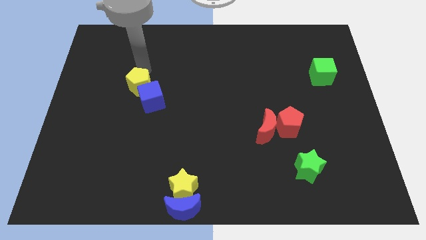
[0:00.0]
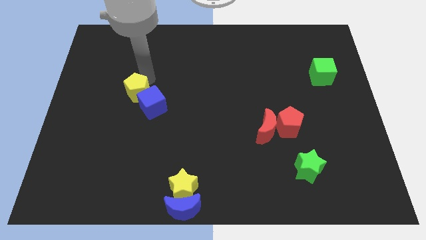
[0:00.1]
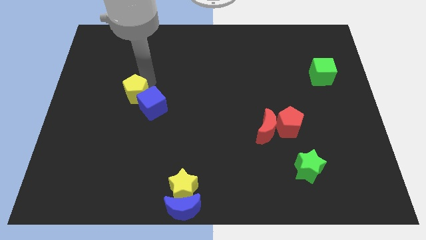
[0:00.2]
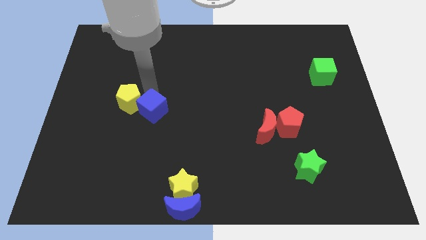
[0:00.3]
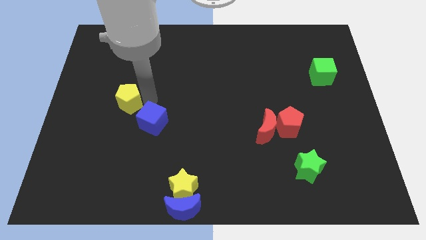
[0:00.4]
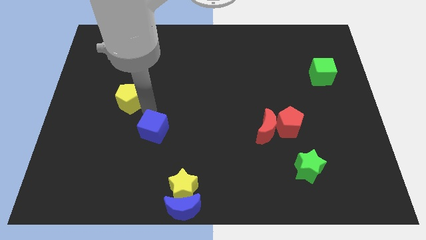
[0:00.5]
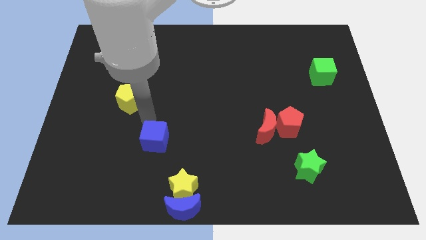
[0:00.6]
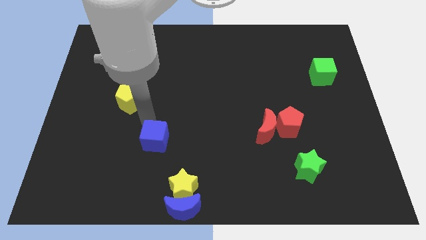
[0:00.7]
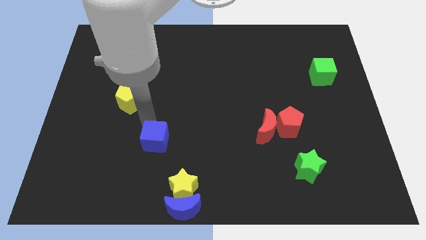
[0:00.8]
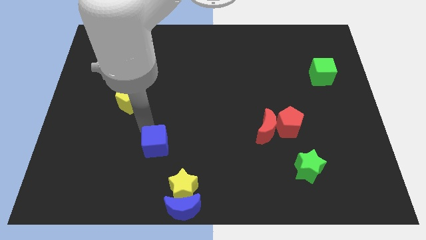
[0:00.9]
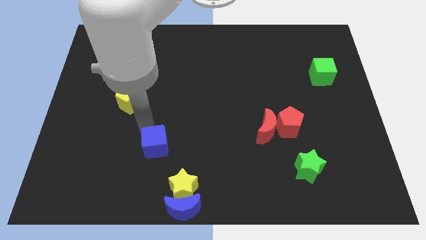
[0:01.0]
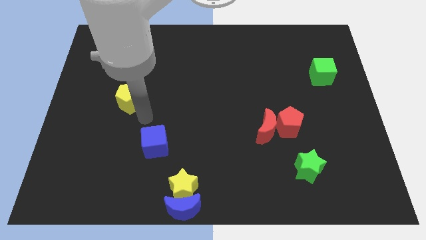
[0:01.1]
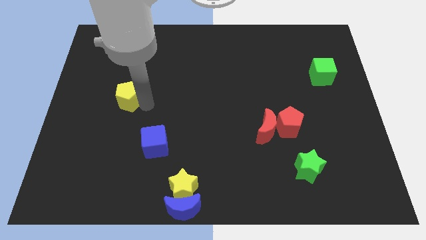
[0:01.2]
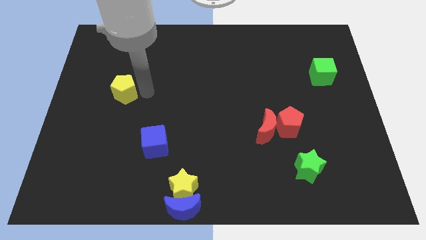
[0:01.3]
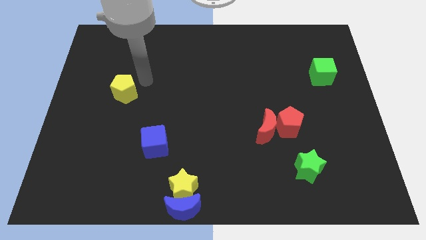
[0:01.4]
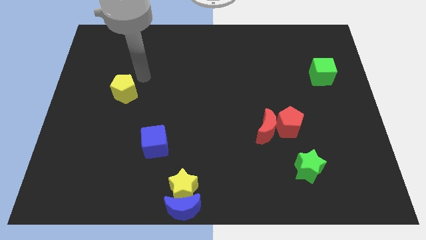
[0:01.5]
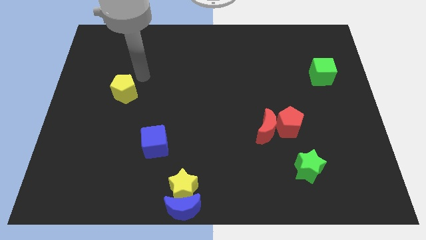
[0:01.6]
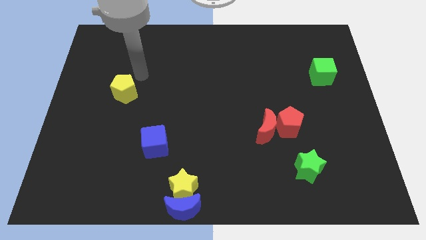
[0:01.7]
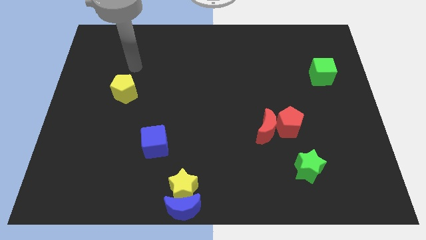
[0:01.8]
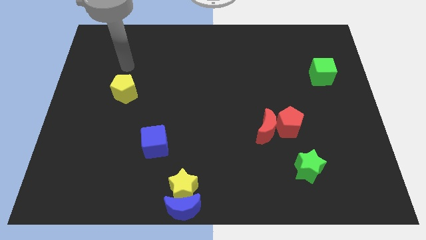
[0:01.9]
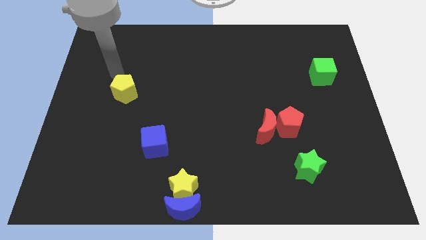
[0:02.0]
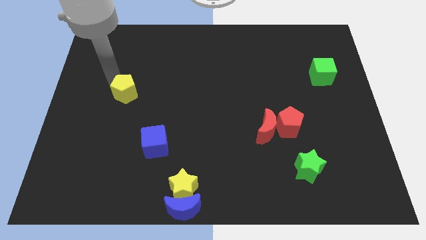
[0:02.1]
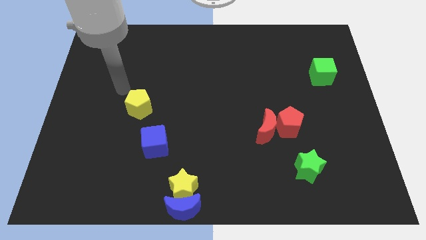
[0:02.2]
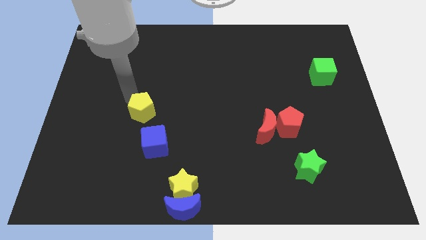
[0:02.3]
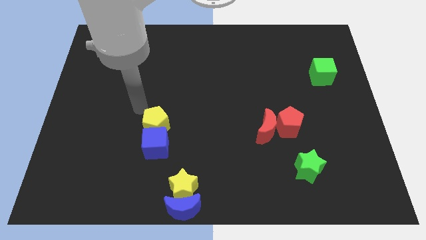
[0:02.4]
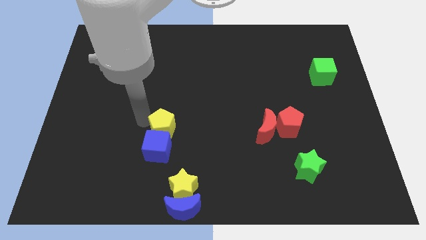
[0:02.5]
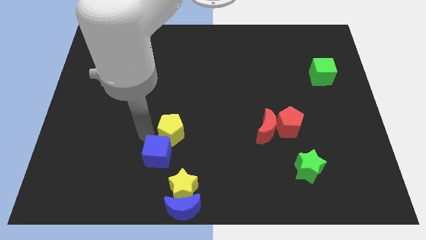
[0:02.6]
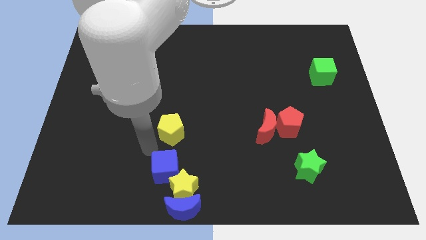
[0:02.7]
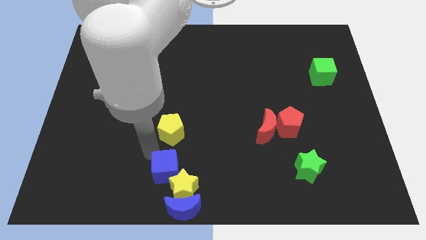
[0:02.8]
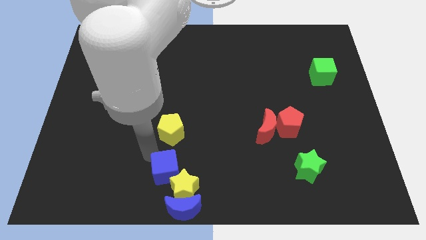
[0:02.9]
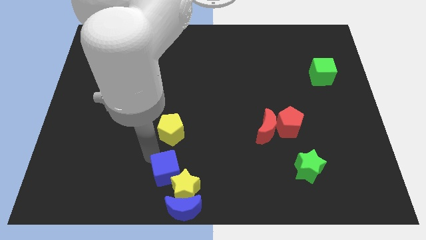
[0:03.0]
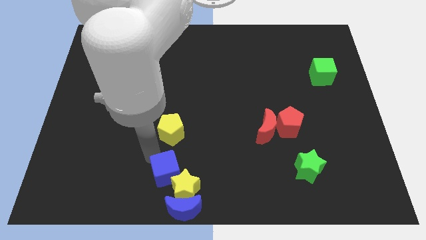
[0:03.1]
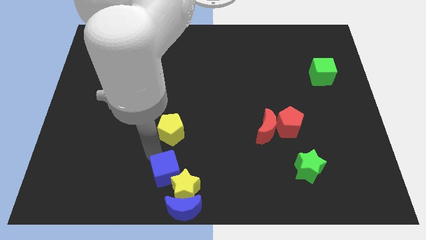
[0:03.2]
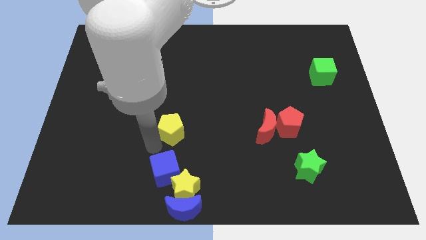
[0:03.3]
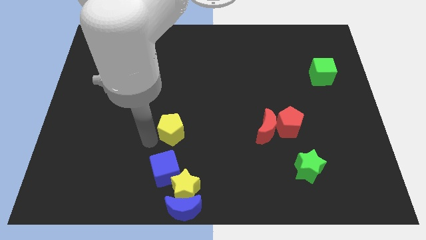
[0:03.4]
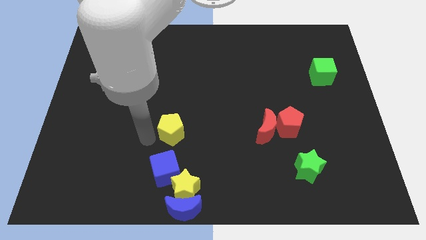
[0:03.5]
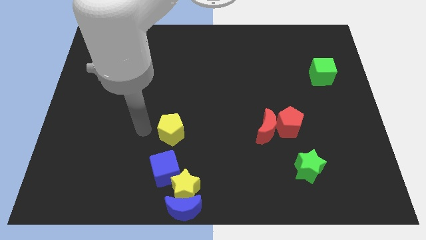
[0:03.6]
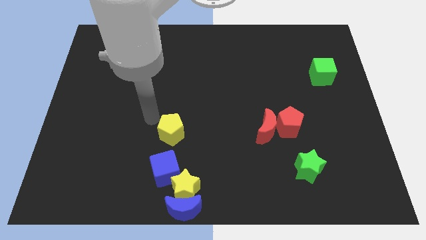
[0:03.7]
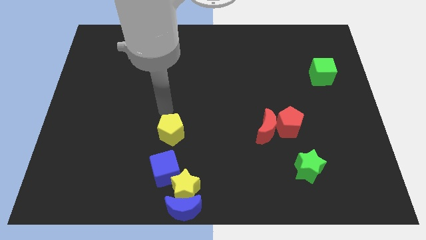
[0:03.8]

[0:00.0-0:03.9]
push the blue cube using the yellow pentagon

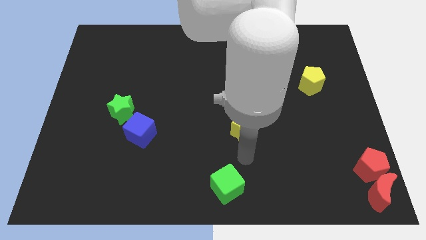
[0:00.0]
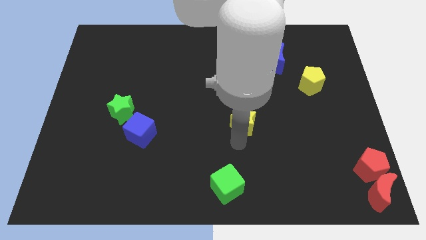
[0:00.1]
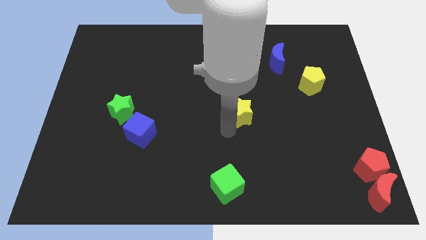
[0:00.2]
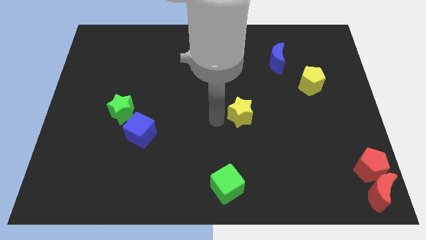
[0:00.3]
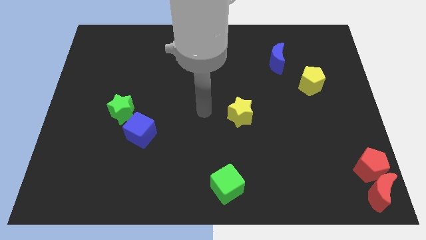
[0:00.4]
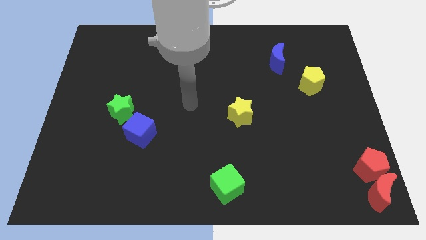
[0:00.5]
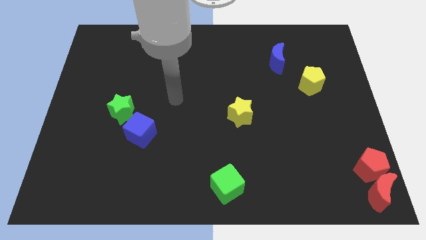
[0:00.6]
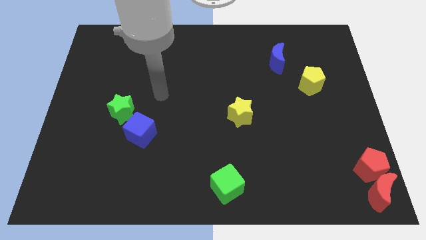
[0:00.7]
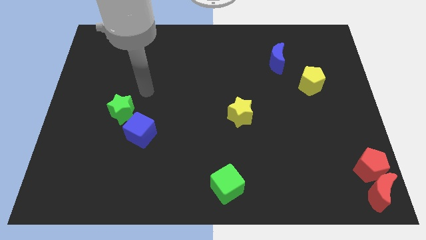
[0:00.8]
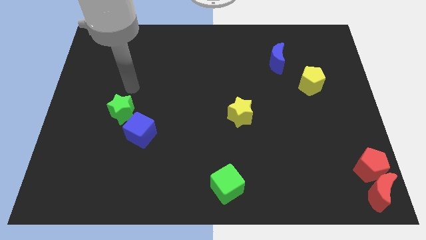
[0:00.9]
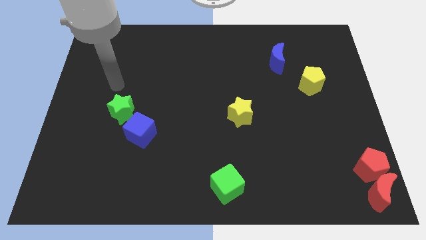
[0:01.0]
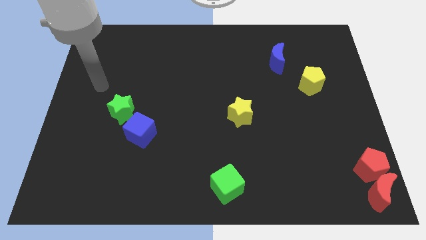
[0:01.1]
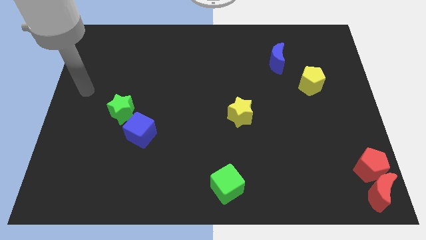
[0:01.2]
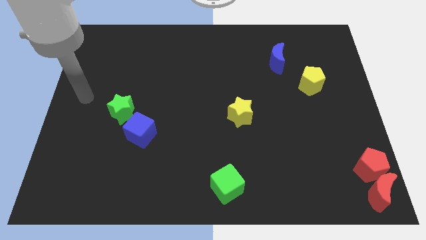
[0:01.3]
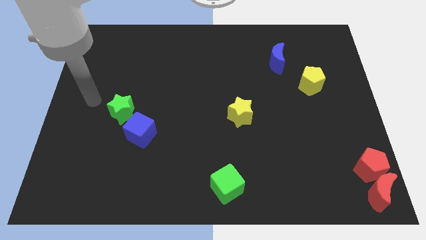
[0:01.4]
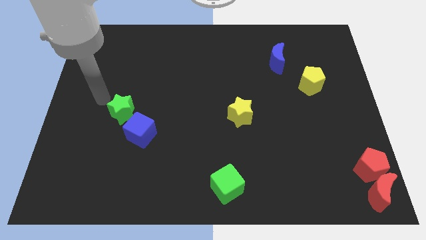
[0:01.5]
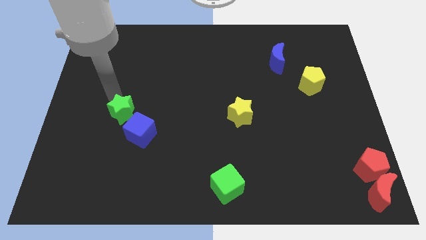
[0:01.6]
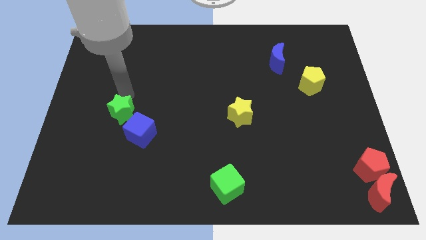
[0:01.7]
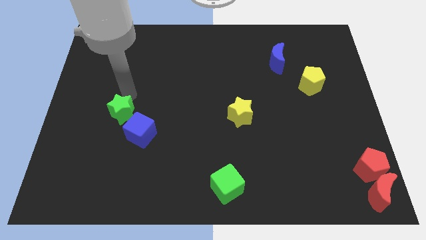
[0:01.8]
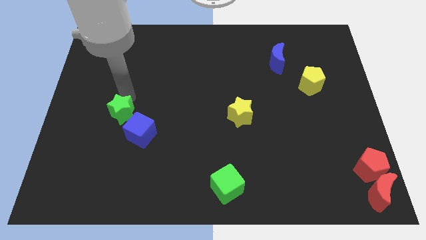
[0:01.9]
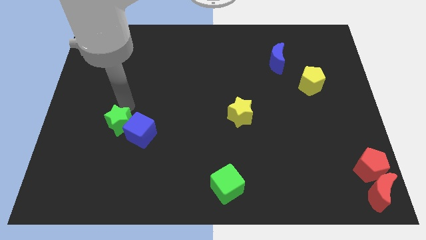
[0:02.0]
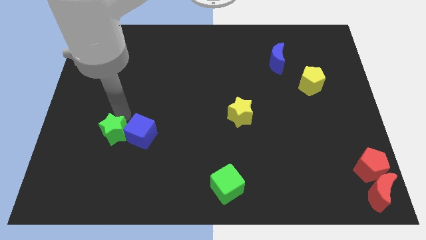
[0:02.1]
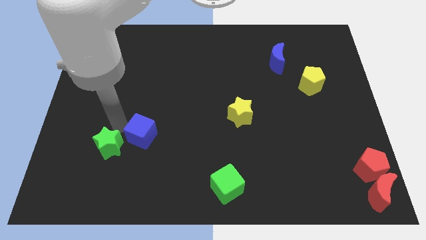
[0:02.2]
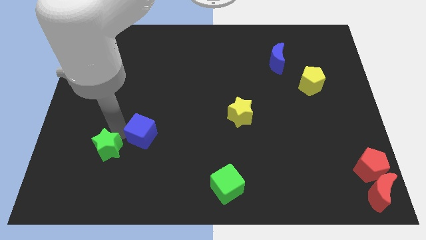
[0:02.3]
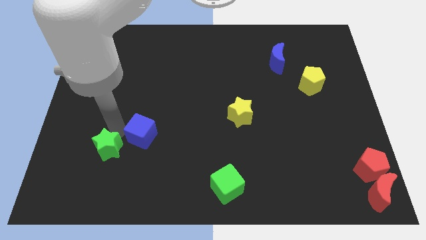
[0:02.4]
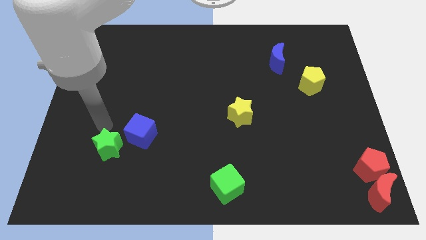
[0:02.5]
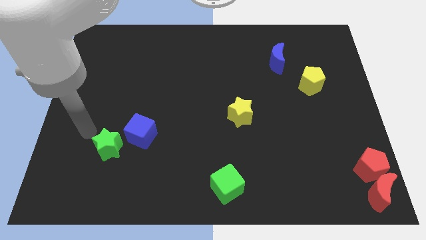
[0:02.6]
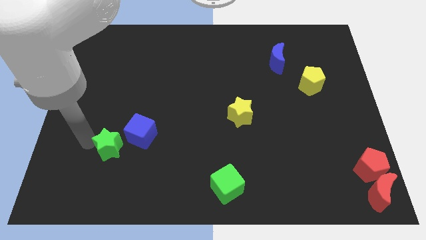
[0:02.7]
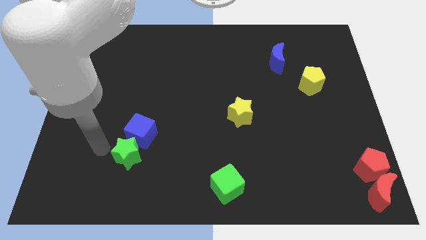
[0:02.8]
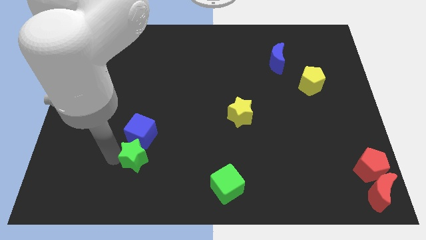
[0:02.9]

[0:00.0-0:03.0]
push green star below blue cube

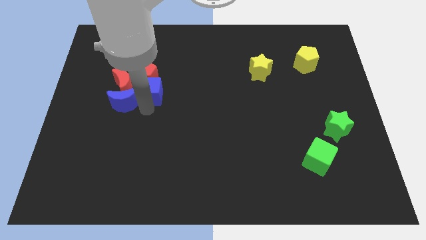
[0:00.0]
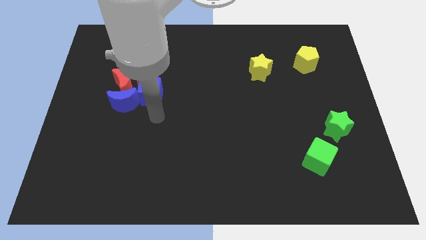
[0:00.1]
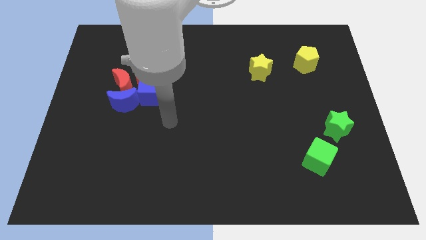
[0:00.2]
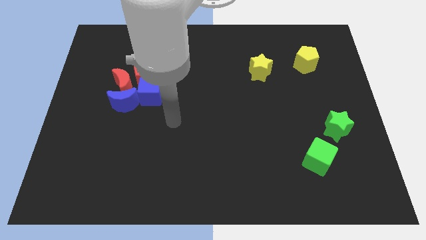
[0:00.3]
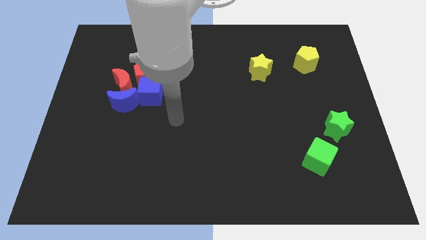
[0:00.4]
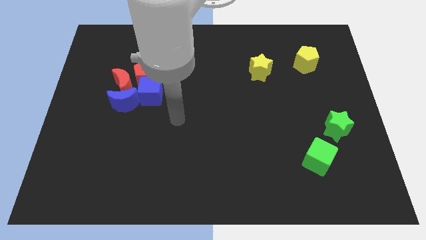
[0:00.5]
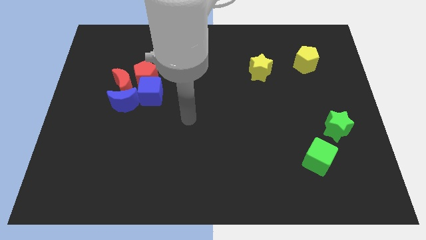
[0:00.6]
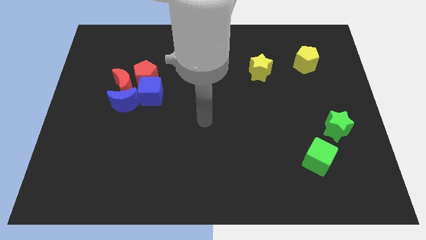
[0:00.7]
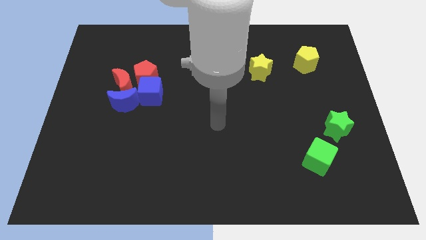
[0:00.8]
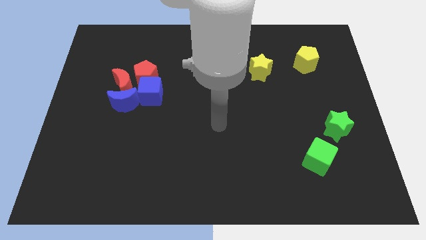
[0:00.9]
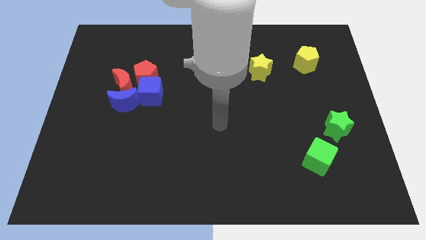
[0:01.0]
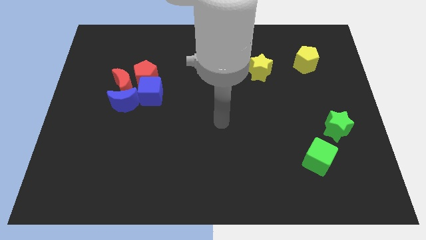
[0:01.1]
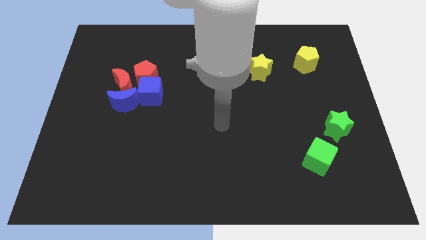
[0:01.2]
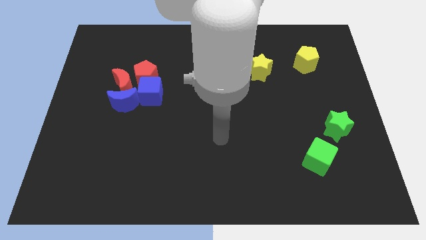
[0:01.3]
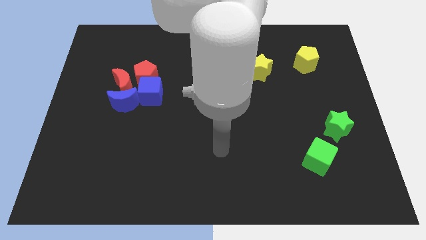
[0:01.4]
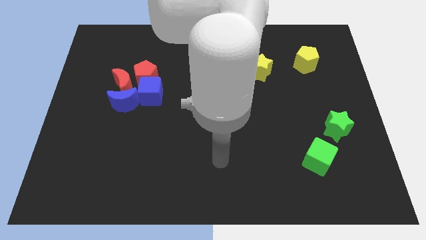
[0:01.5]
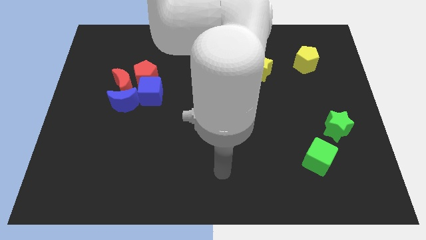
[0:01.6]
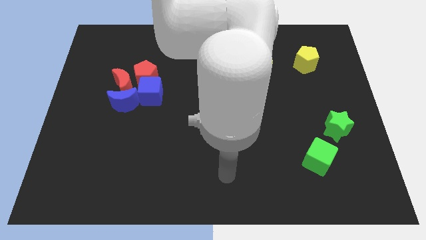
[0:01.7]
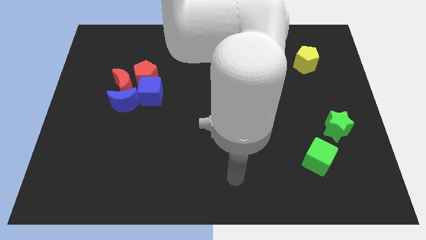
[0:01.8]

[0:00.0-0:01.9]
move your hand away from the blue cube

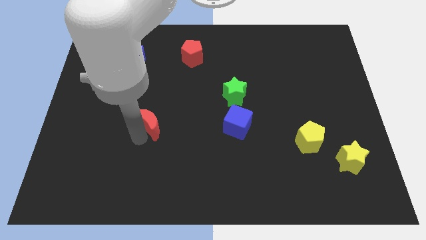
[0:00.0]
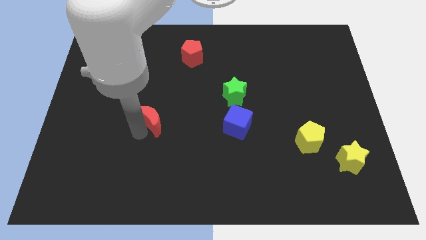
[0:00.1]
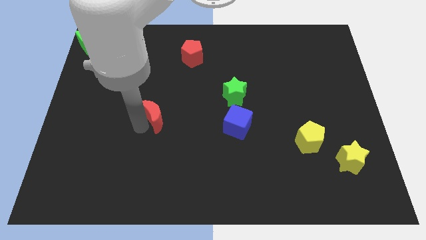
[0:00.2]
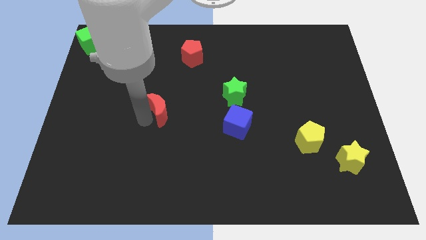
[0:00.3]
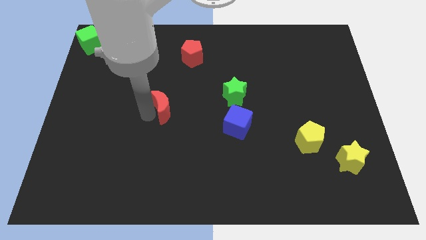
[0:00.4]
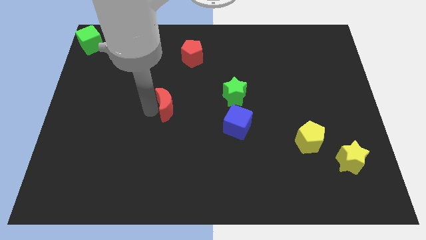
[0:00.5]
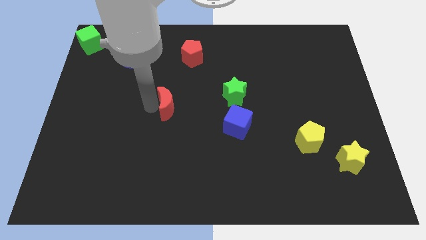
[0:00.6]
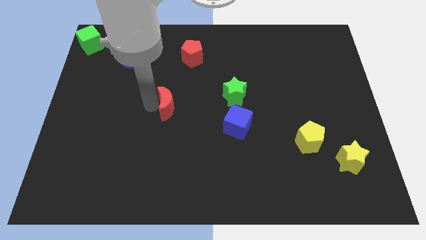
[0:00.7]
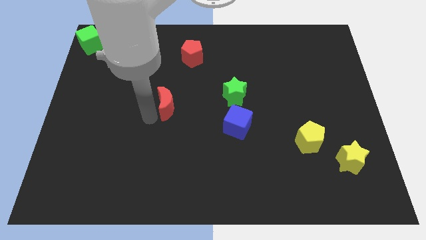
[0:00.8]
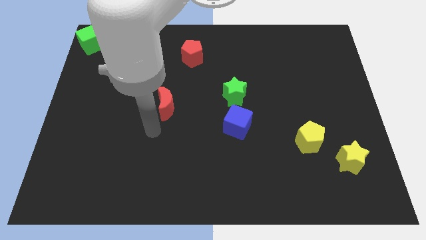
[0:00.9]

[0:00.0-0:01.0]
slide the red moon left to the green star
